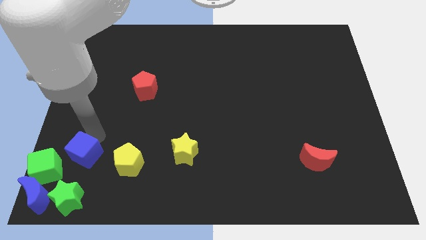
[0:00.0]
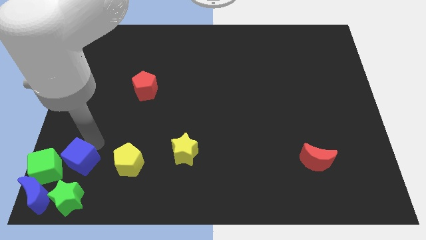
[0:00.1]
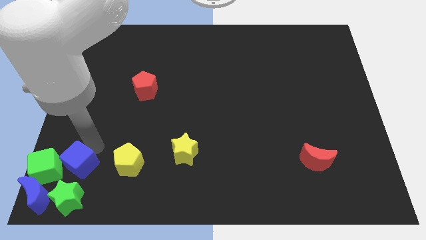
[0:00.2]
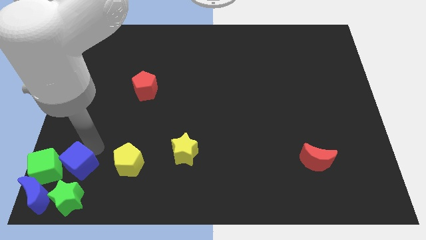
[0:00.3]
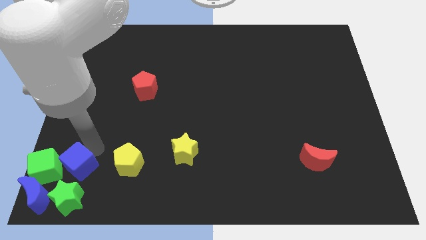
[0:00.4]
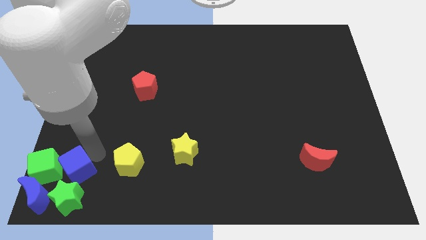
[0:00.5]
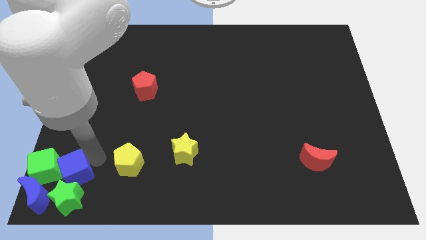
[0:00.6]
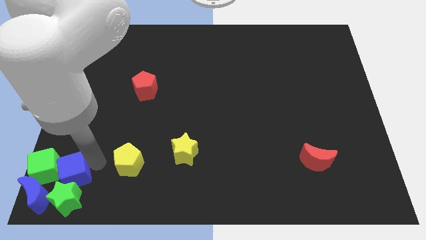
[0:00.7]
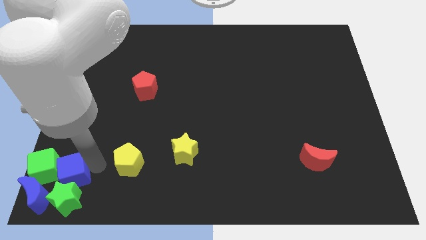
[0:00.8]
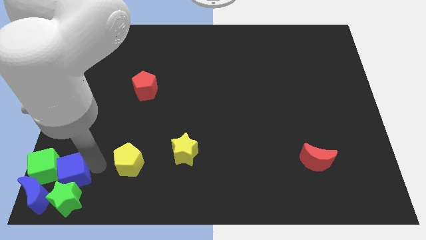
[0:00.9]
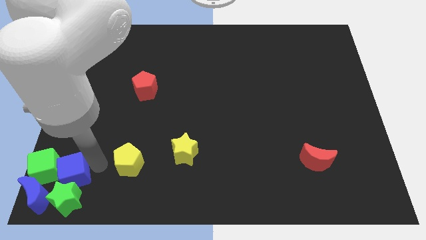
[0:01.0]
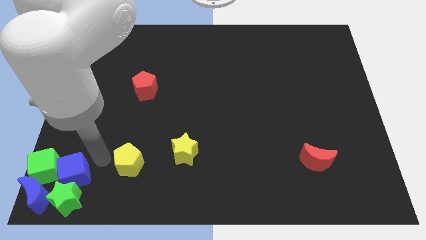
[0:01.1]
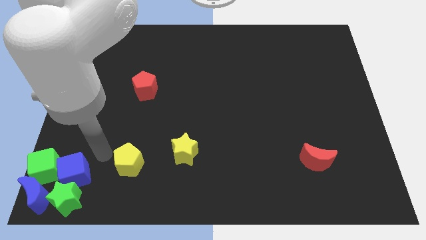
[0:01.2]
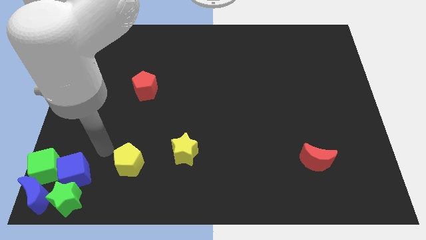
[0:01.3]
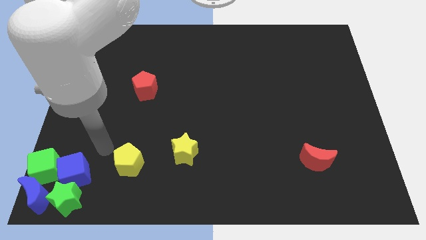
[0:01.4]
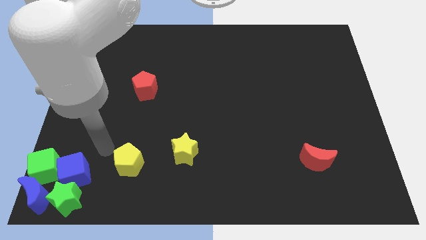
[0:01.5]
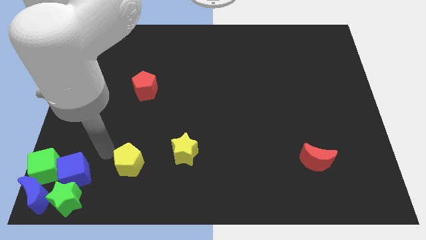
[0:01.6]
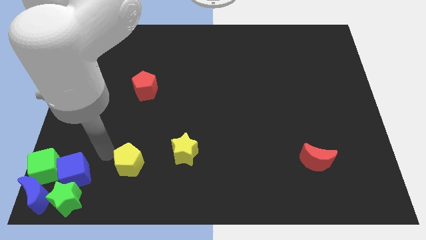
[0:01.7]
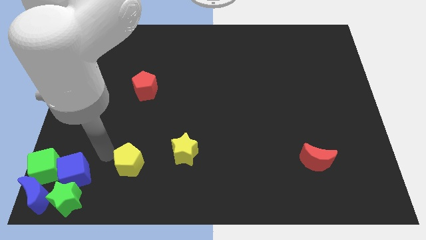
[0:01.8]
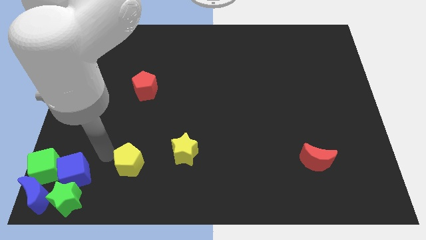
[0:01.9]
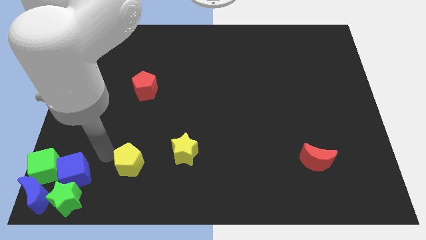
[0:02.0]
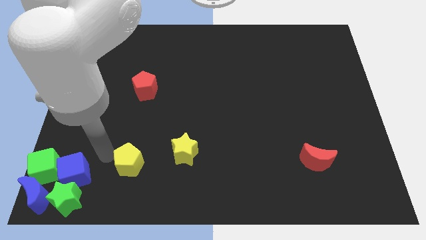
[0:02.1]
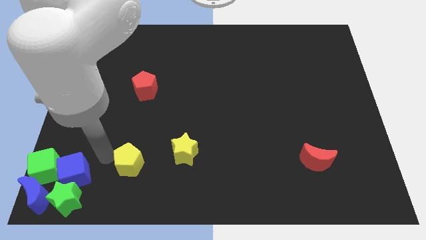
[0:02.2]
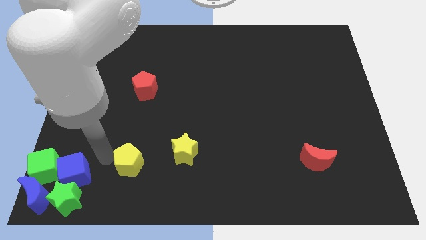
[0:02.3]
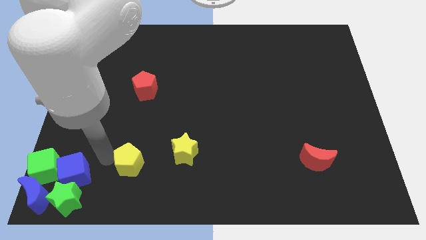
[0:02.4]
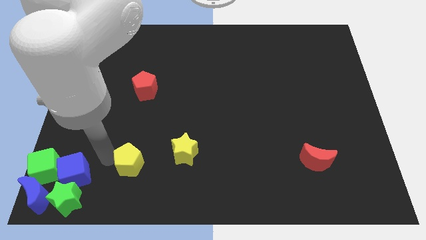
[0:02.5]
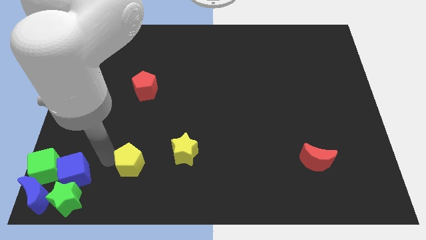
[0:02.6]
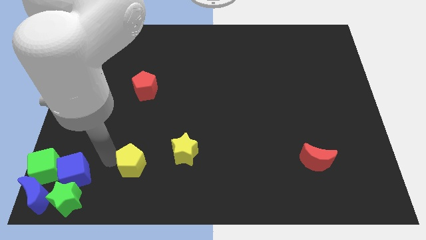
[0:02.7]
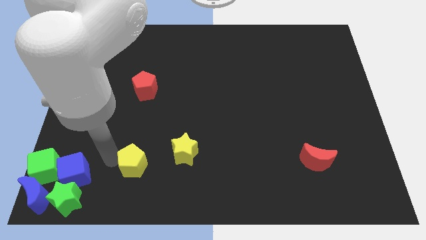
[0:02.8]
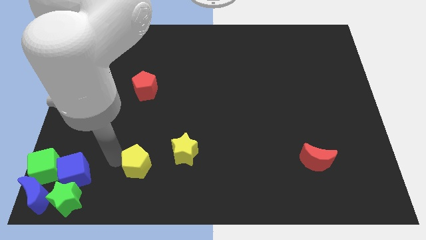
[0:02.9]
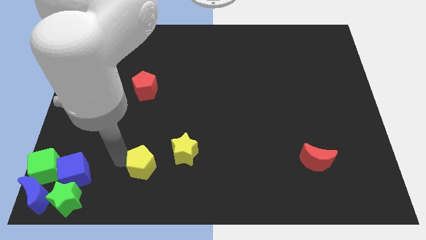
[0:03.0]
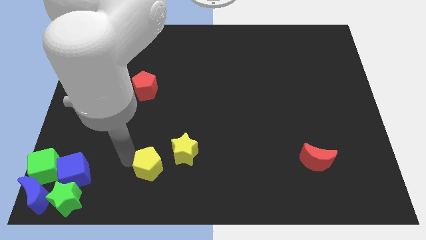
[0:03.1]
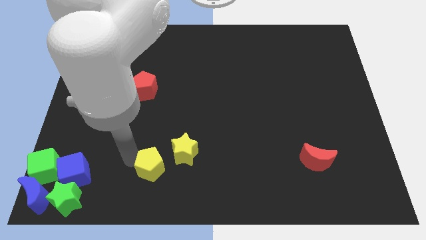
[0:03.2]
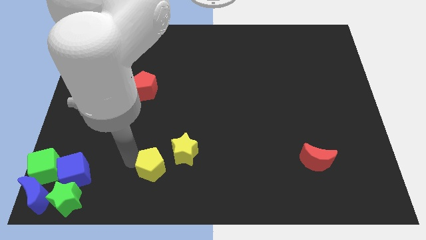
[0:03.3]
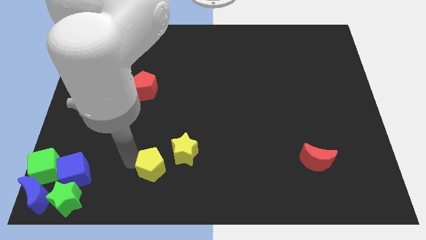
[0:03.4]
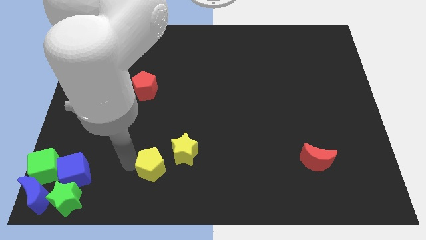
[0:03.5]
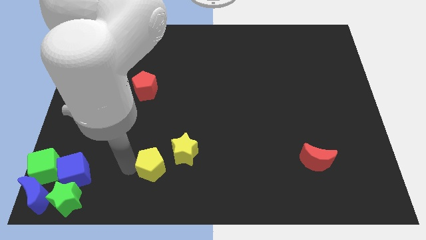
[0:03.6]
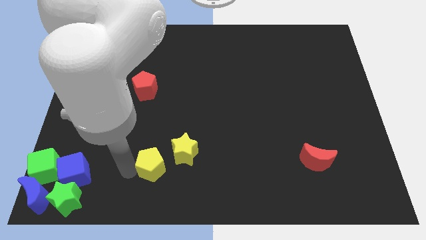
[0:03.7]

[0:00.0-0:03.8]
move yellow pentagon towards yellow star

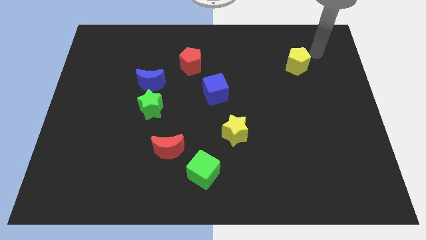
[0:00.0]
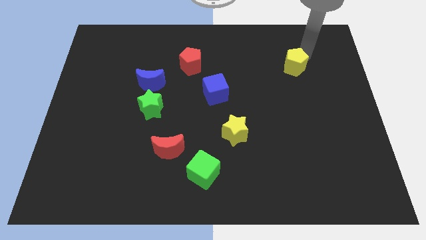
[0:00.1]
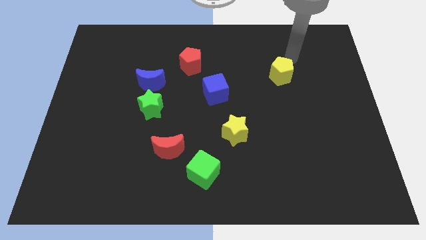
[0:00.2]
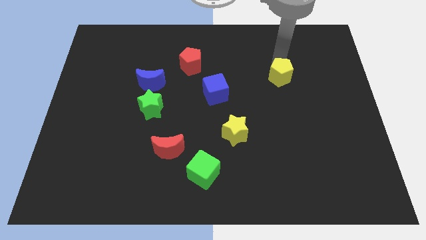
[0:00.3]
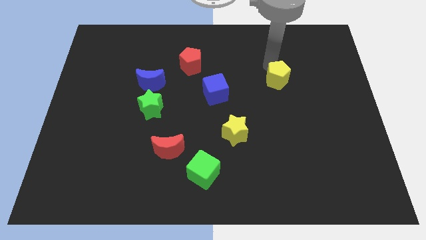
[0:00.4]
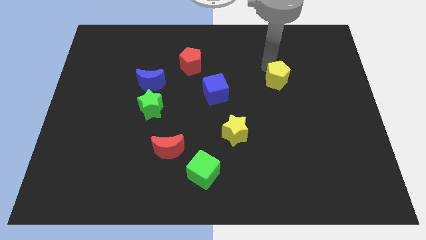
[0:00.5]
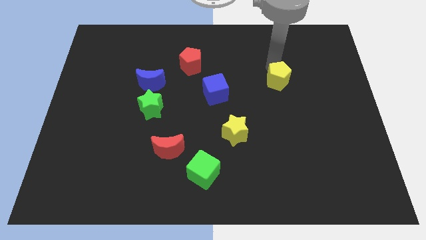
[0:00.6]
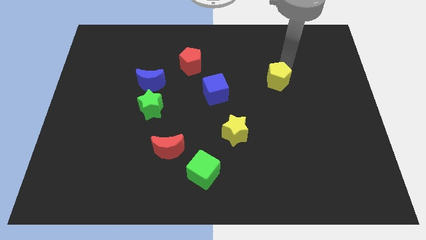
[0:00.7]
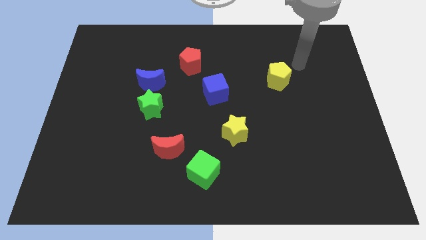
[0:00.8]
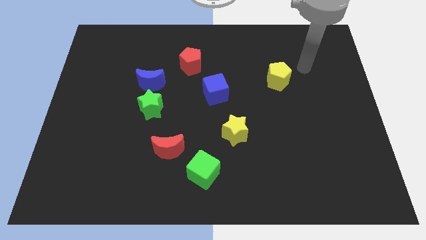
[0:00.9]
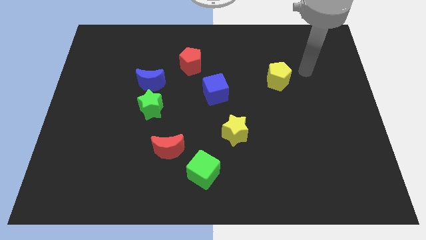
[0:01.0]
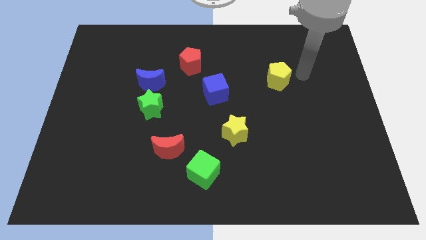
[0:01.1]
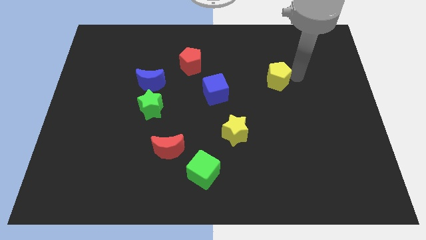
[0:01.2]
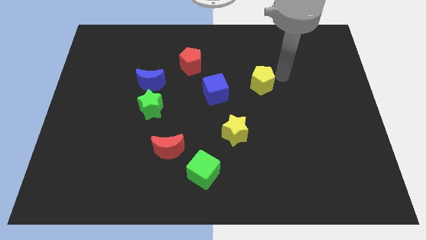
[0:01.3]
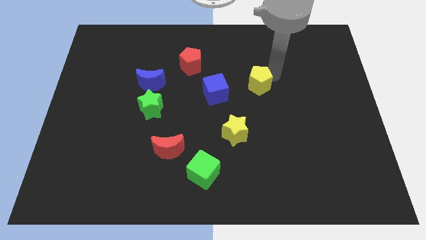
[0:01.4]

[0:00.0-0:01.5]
push the yellow pentagon to the right of the blue cube

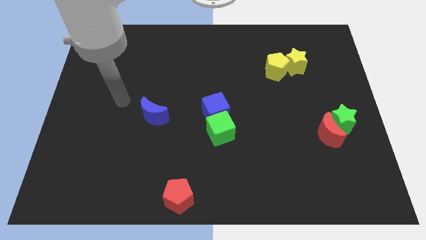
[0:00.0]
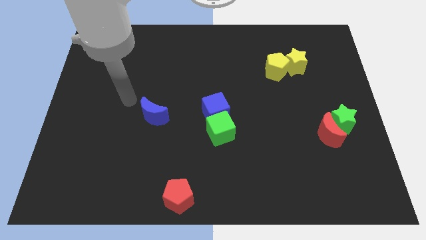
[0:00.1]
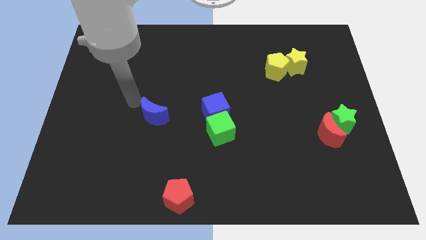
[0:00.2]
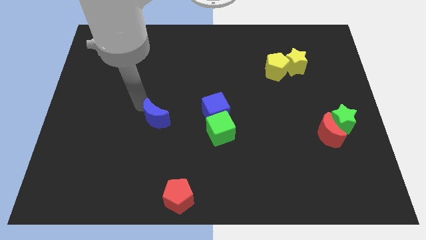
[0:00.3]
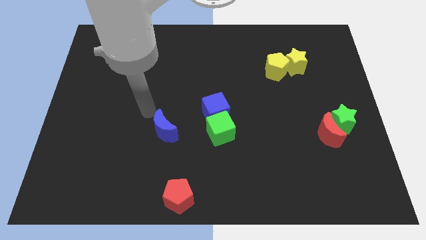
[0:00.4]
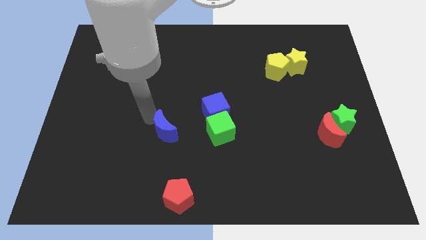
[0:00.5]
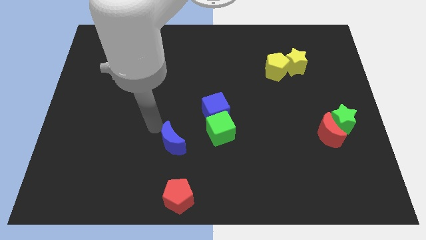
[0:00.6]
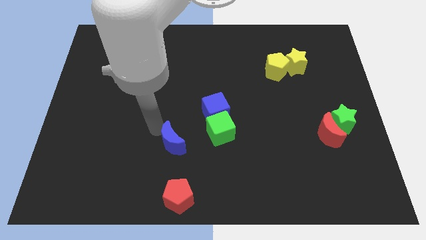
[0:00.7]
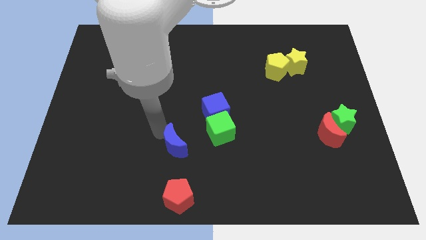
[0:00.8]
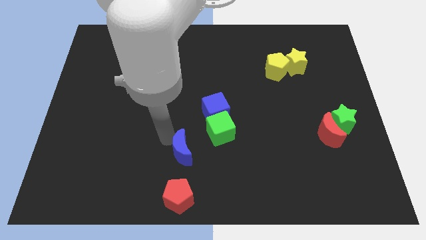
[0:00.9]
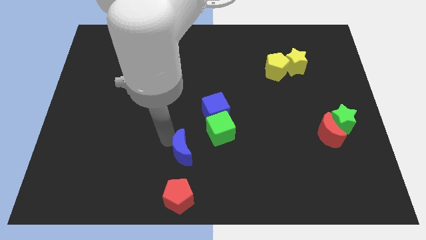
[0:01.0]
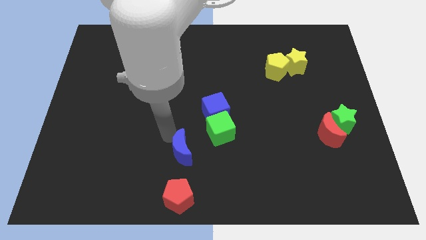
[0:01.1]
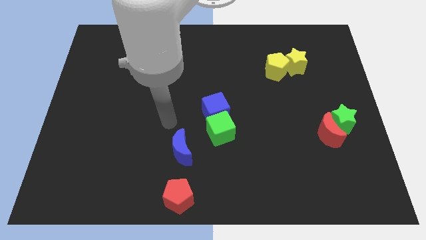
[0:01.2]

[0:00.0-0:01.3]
put the blue moon at the top of red pentagon

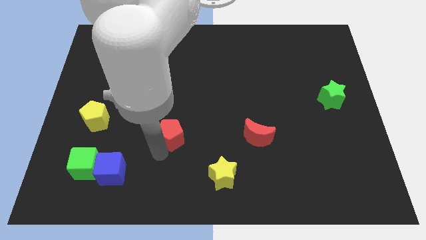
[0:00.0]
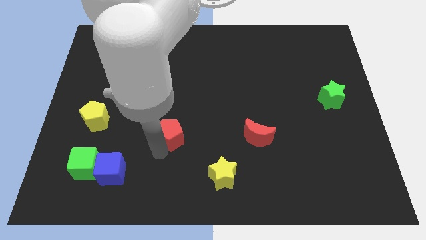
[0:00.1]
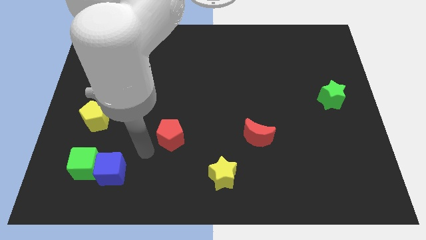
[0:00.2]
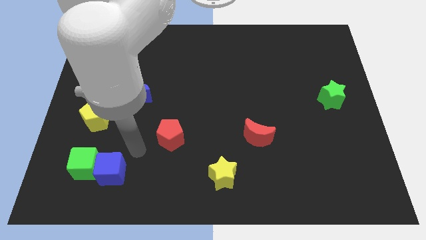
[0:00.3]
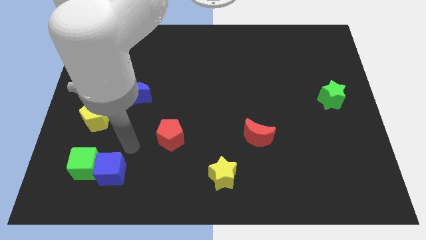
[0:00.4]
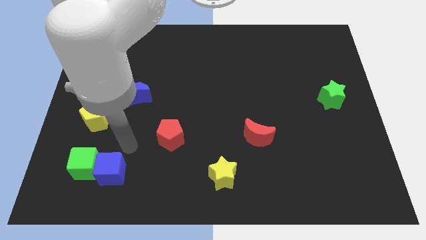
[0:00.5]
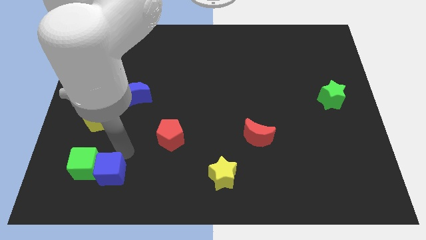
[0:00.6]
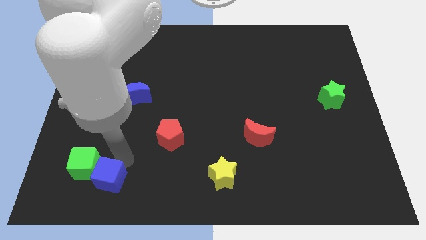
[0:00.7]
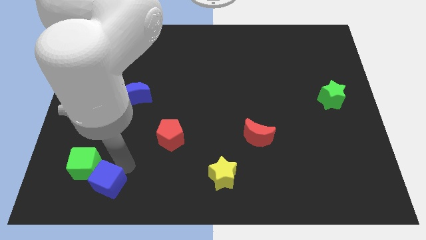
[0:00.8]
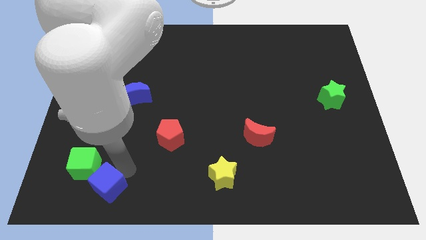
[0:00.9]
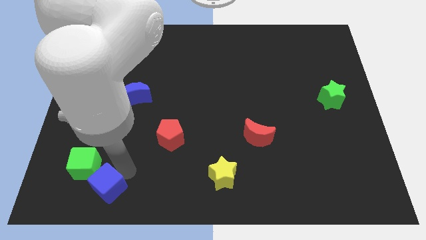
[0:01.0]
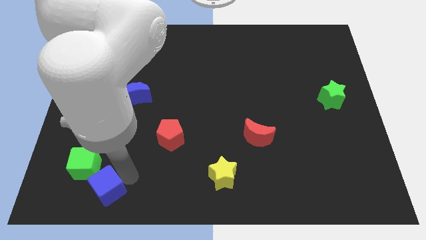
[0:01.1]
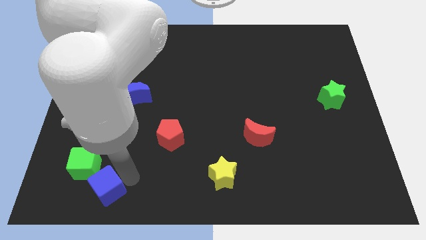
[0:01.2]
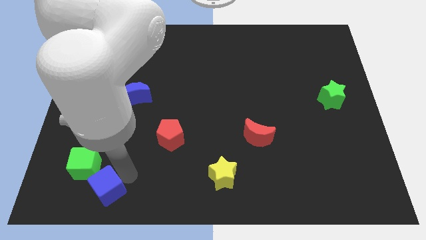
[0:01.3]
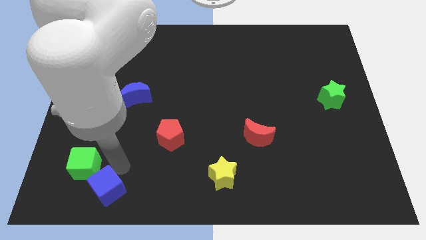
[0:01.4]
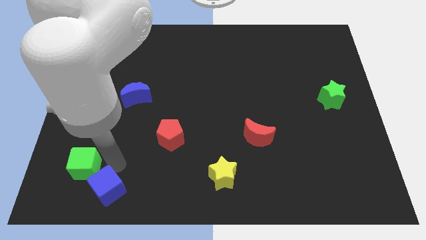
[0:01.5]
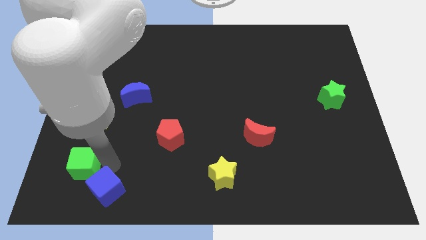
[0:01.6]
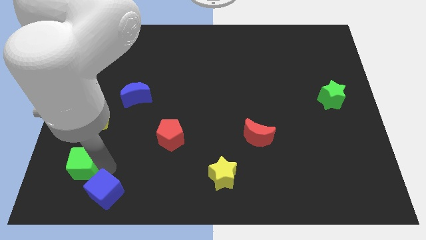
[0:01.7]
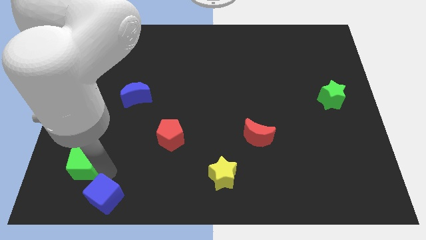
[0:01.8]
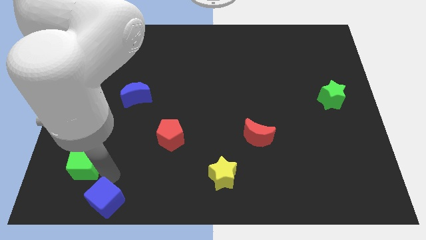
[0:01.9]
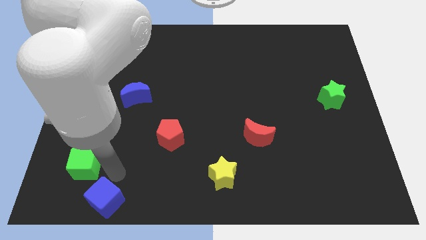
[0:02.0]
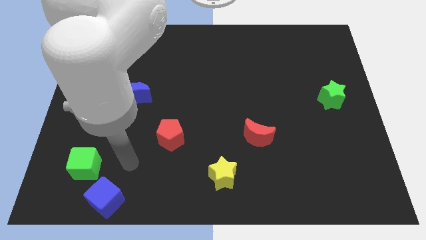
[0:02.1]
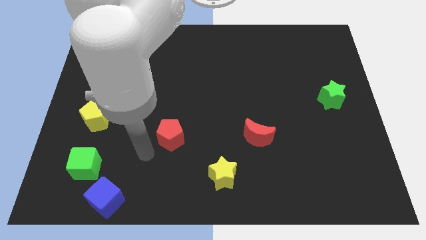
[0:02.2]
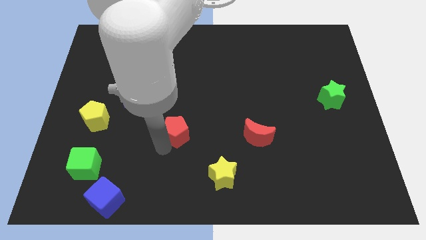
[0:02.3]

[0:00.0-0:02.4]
push blue cube towards the bottom center of the board
